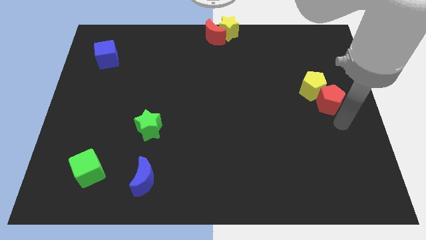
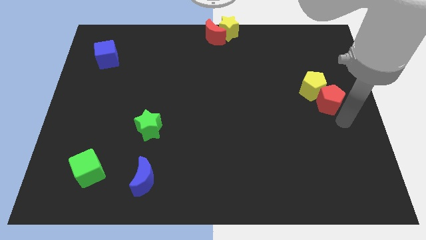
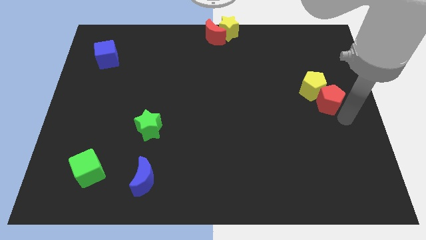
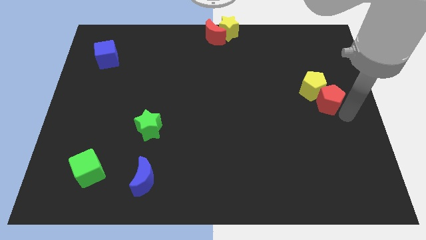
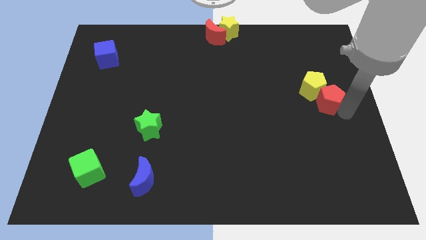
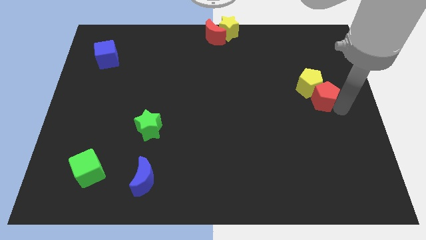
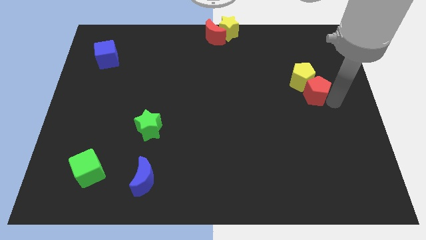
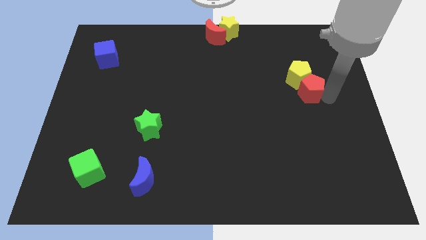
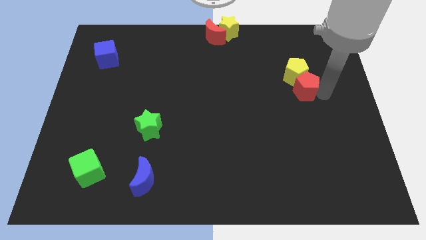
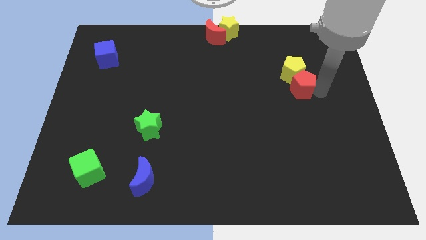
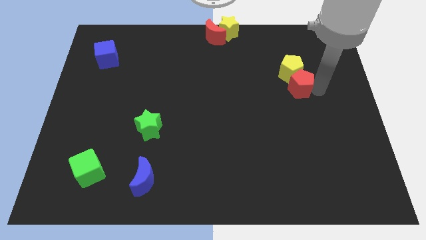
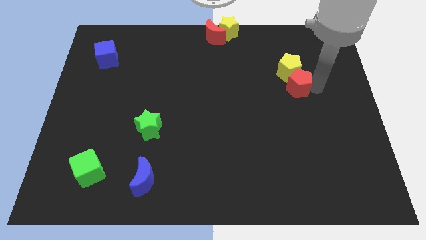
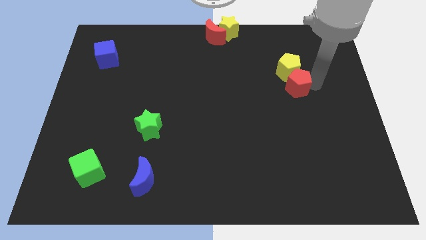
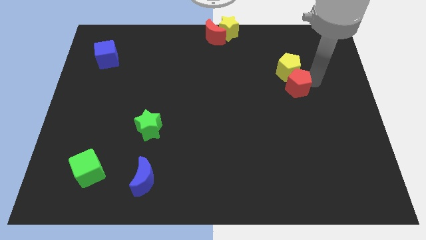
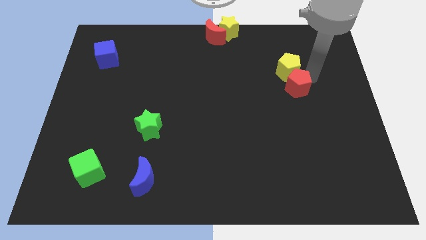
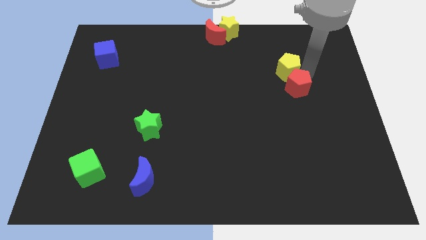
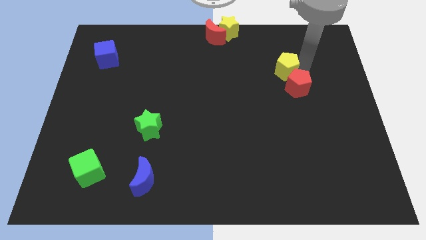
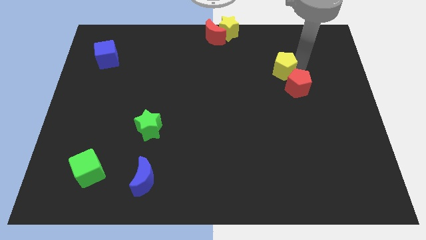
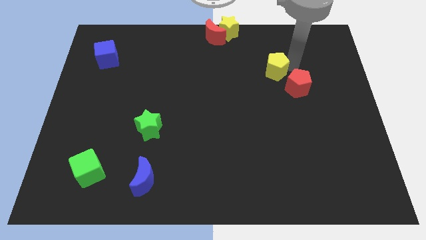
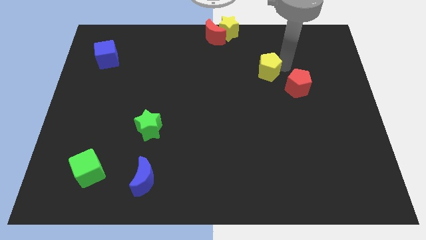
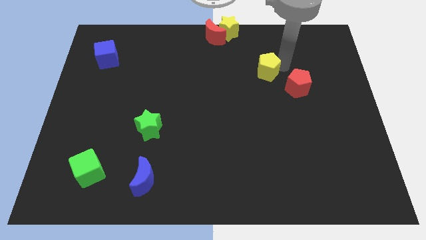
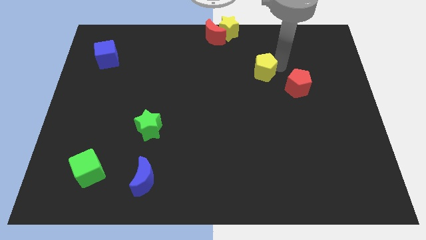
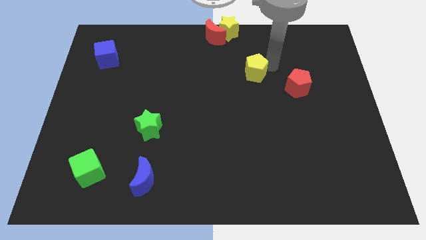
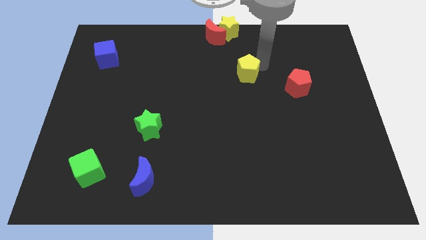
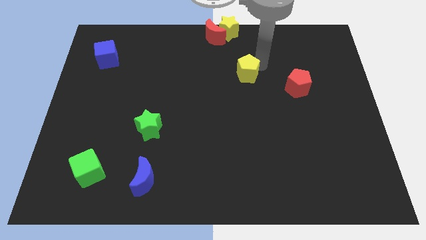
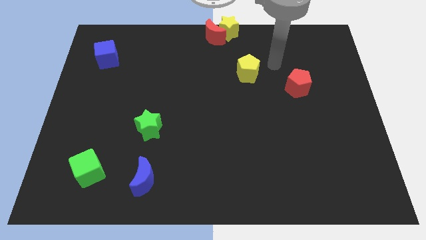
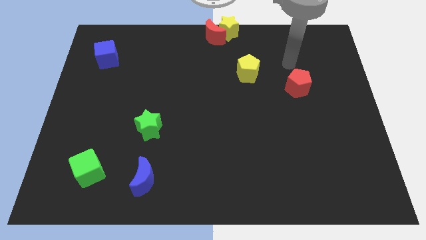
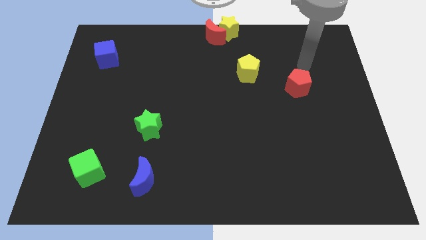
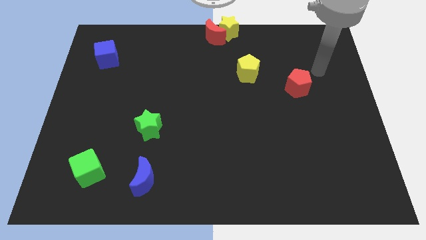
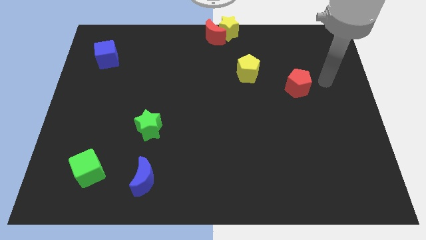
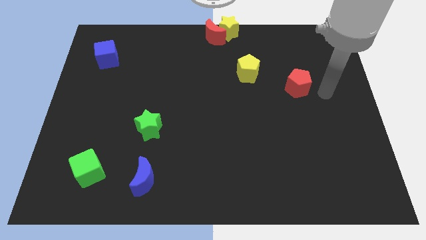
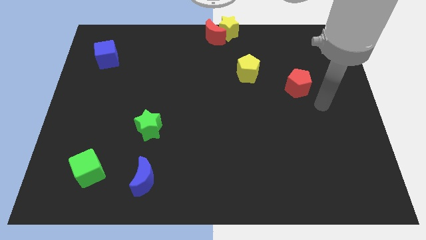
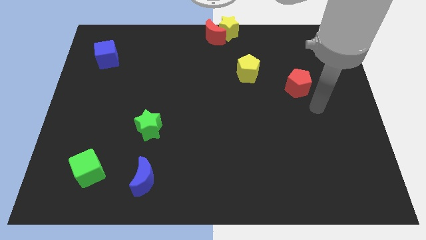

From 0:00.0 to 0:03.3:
separate yellow pentagon and the red pentagon

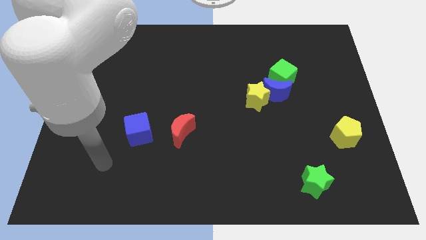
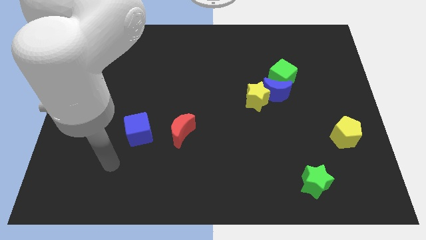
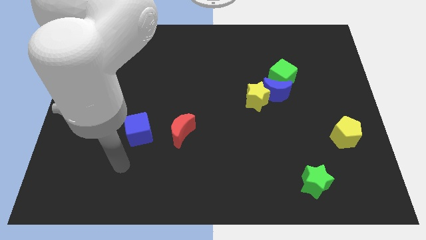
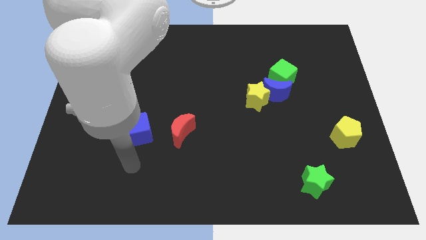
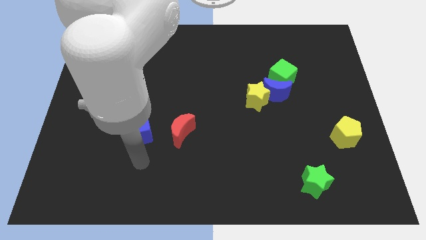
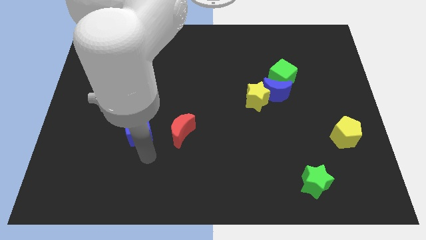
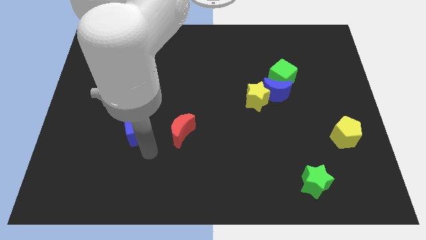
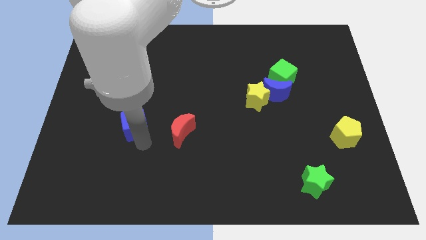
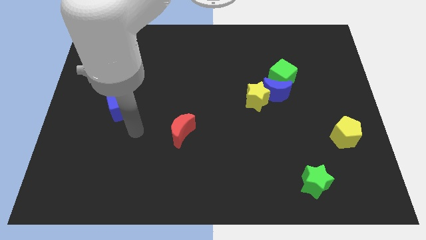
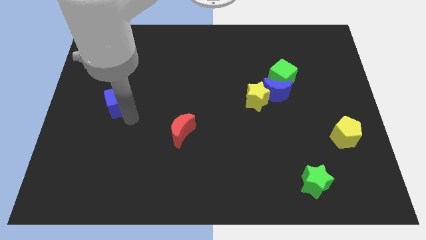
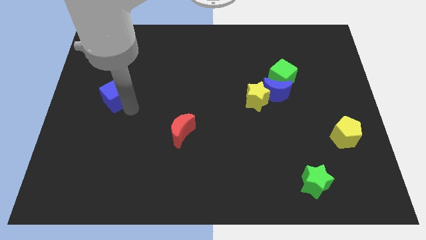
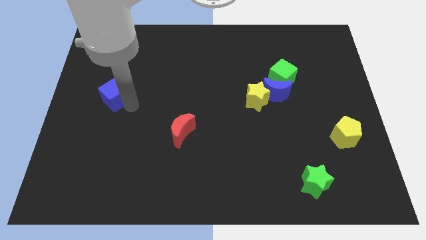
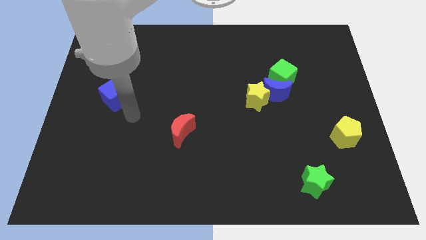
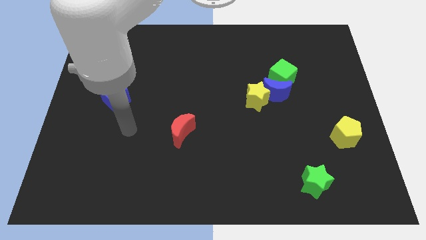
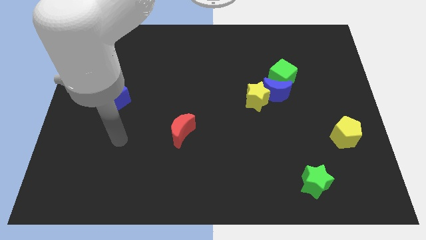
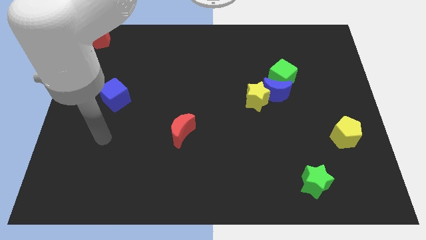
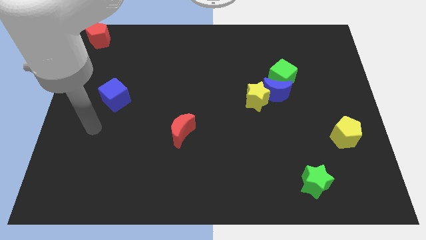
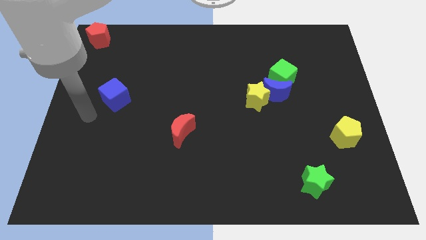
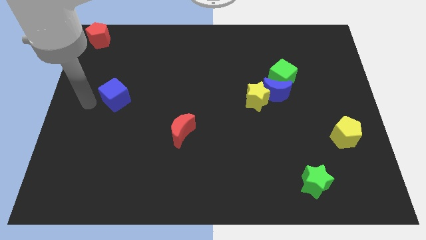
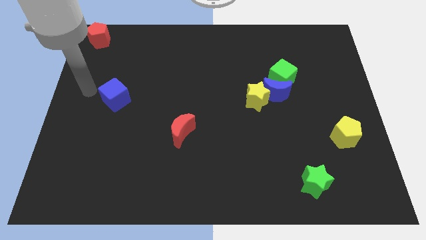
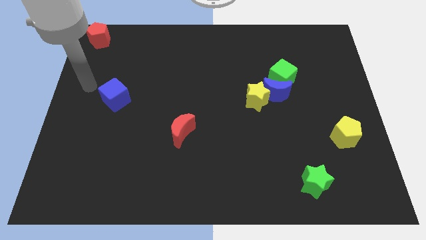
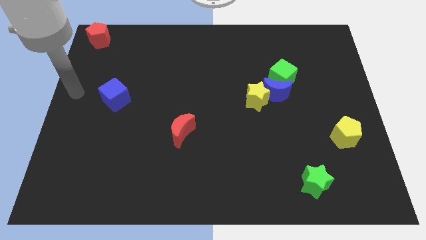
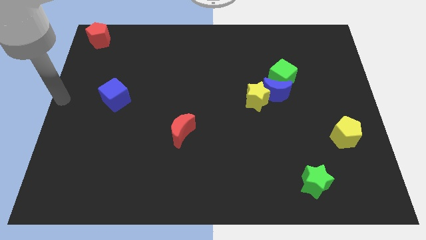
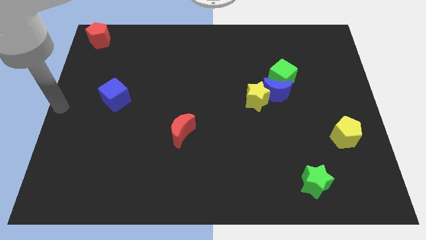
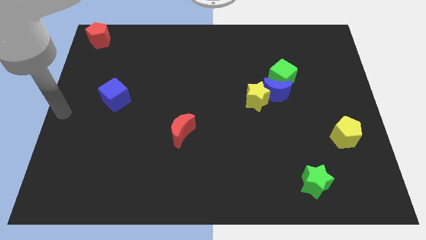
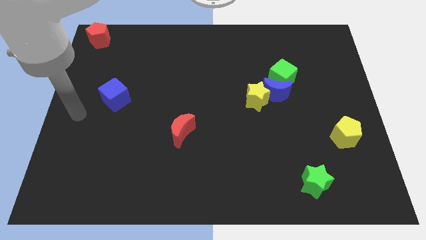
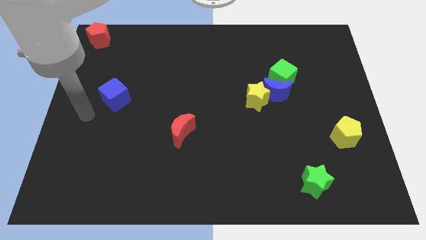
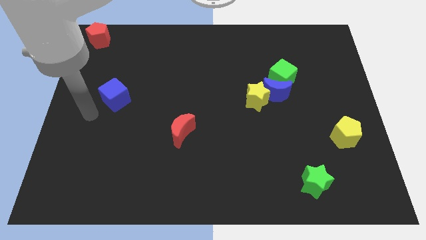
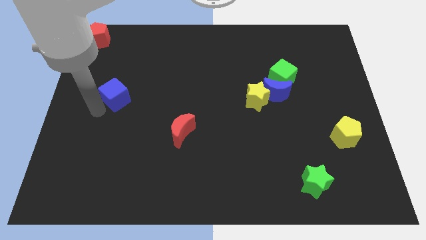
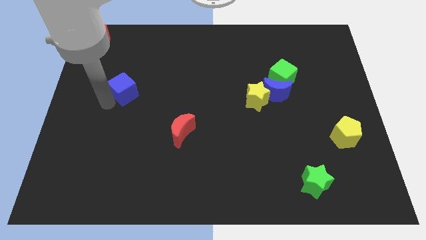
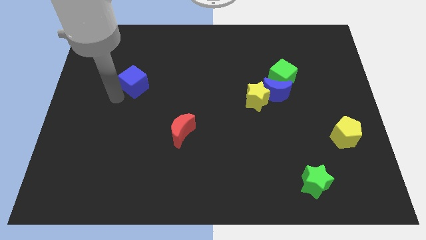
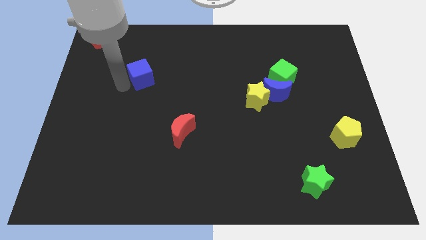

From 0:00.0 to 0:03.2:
place blue cube in between red blocks

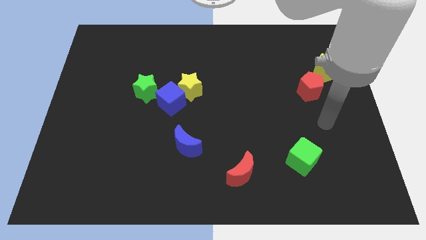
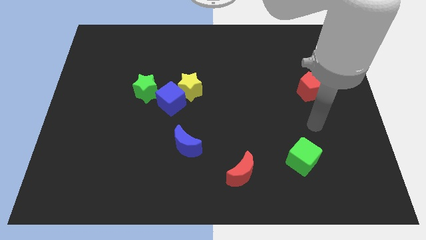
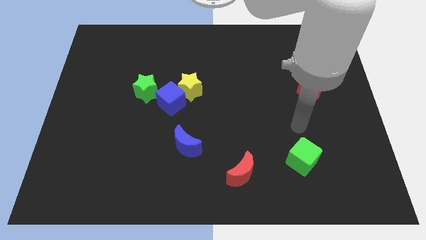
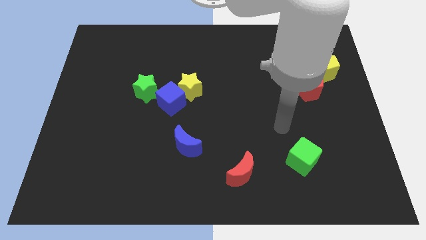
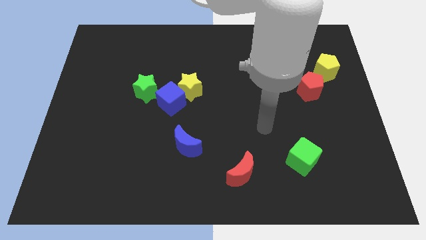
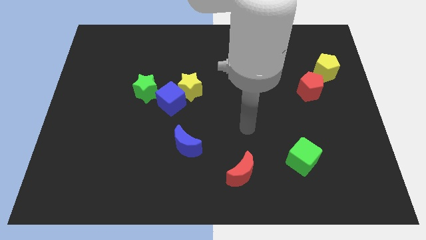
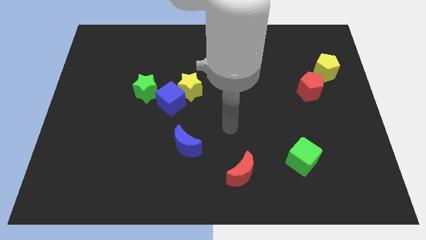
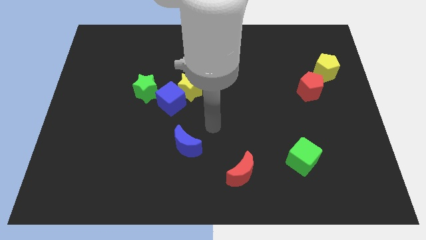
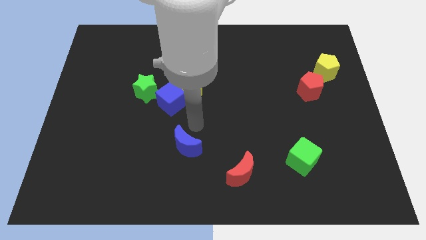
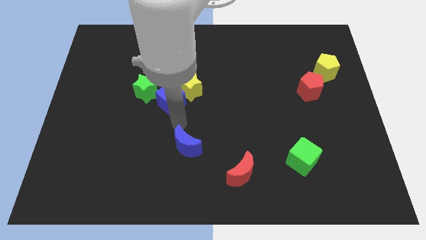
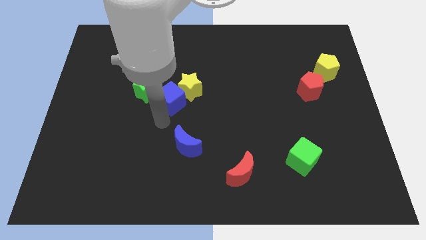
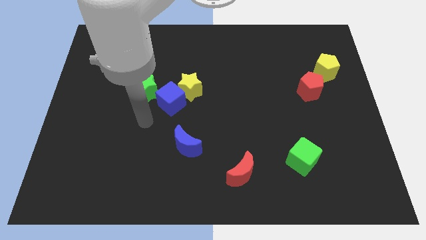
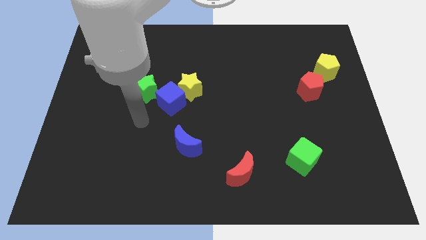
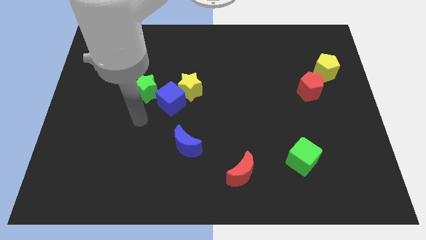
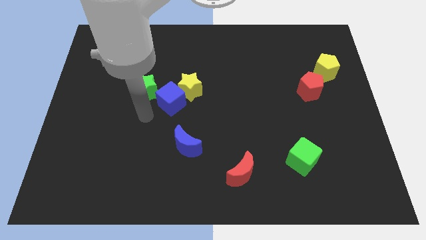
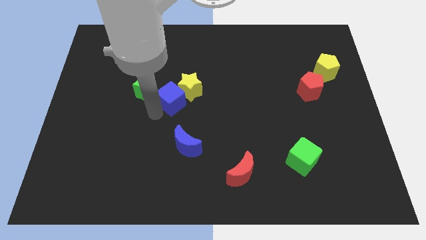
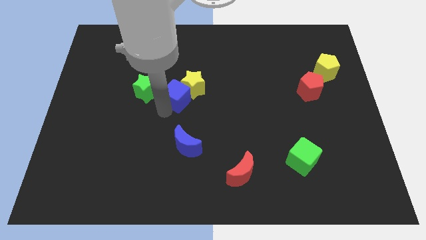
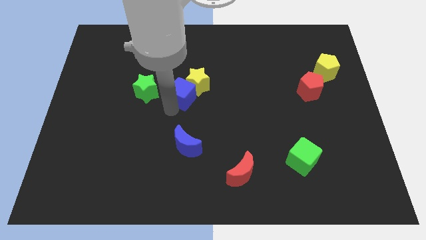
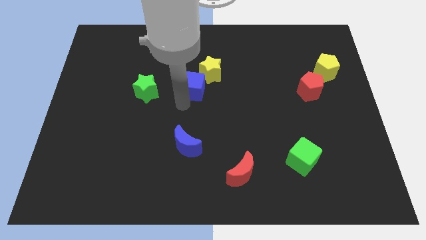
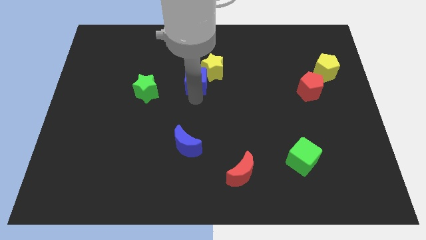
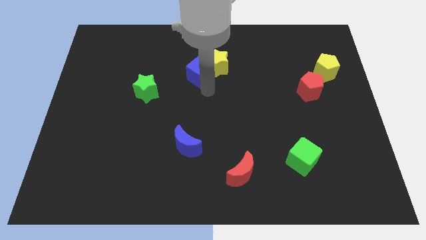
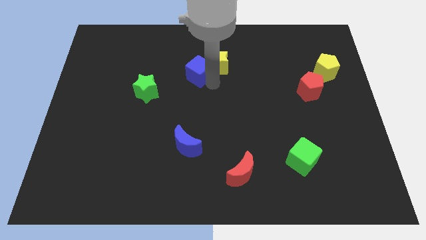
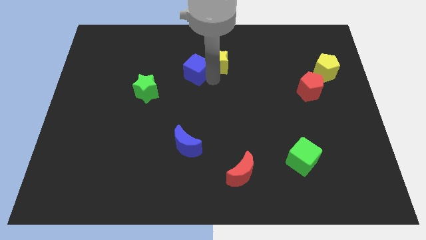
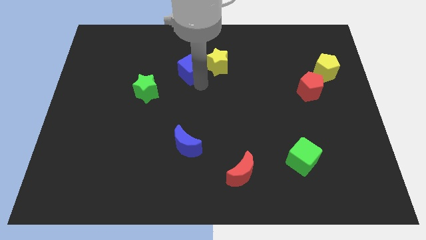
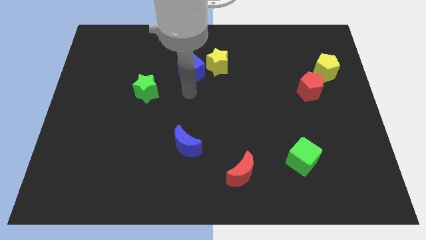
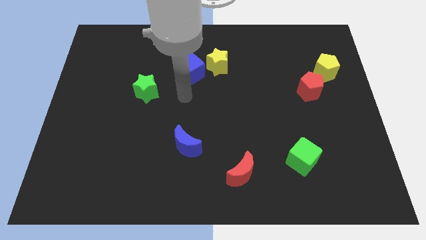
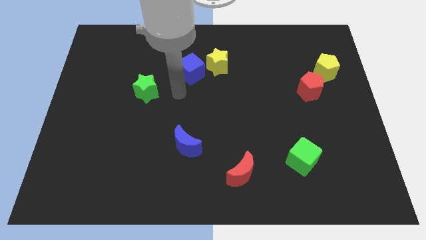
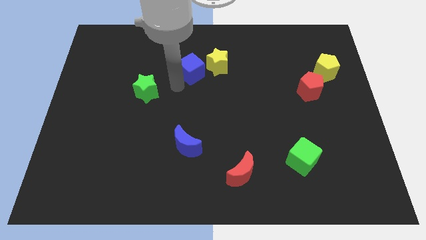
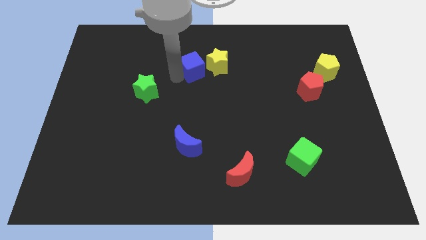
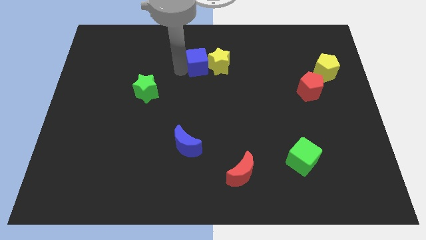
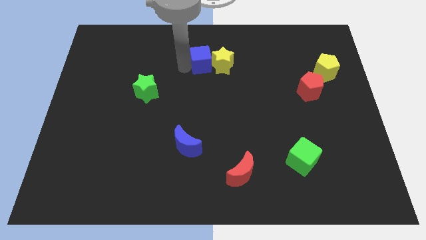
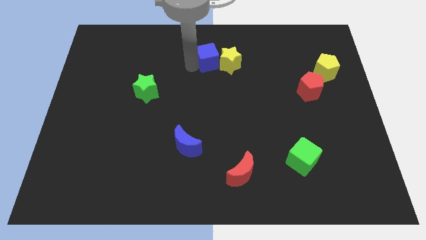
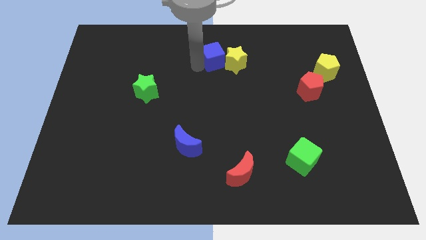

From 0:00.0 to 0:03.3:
push the yellow star and the blue cube to the top
